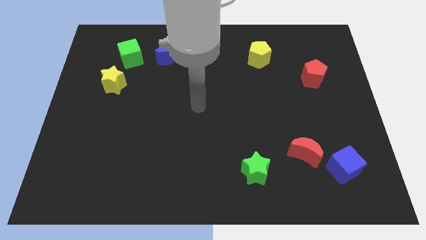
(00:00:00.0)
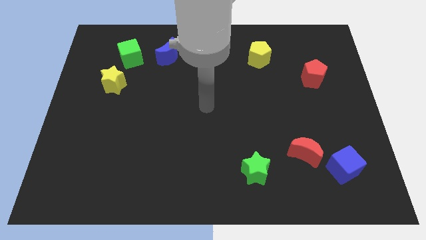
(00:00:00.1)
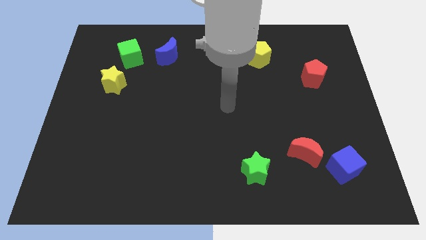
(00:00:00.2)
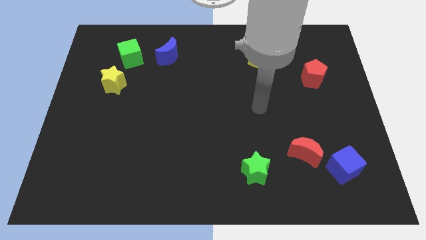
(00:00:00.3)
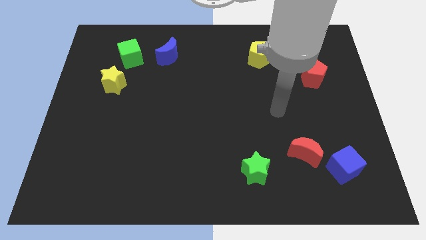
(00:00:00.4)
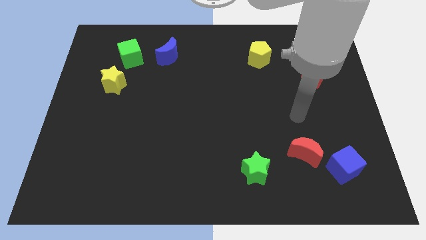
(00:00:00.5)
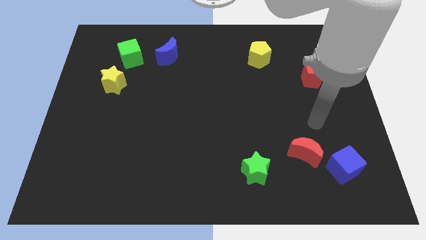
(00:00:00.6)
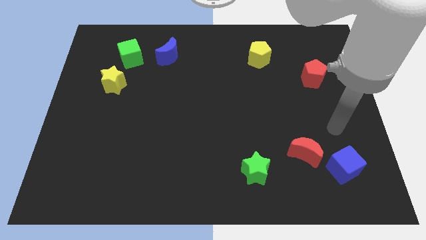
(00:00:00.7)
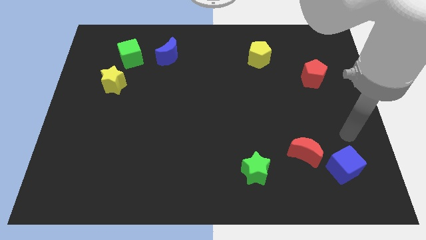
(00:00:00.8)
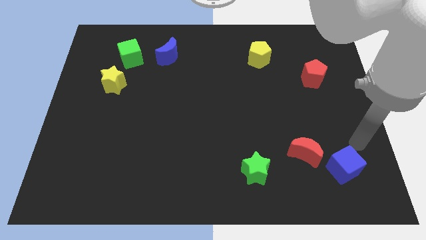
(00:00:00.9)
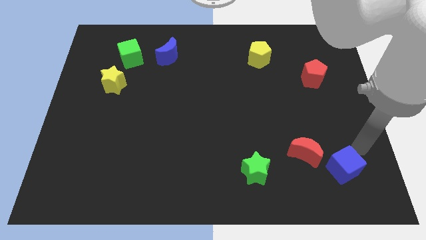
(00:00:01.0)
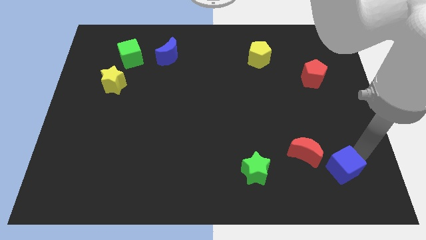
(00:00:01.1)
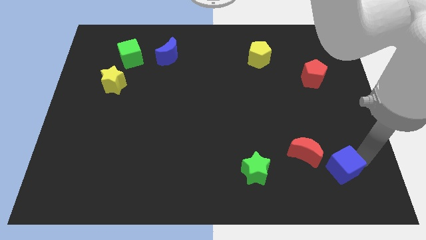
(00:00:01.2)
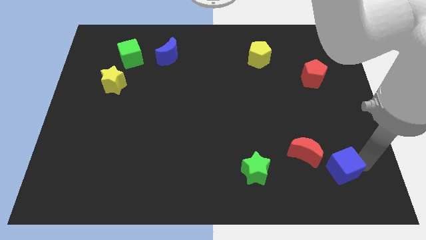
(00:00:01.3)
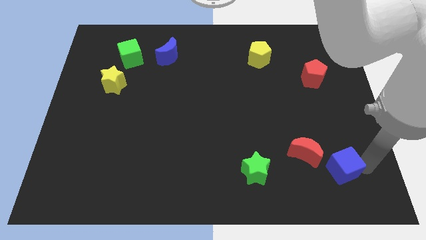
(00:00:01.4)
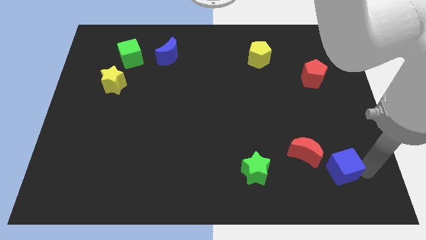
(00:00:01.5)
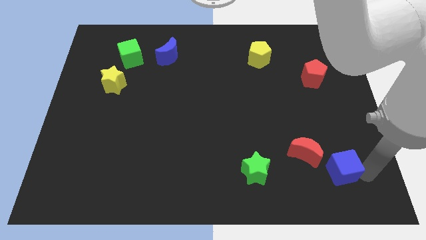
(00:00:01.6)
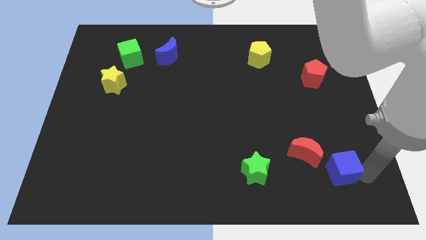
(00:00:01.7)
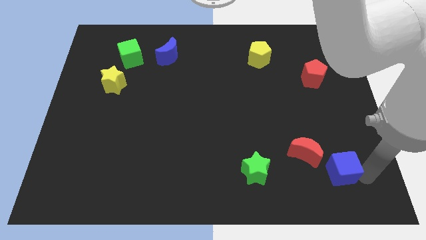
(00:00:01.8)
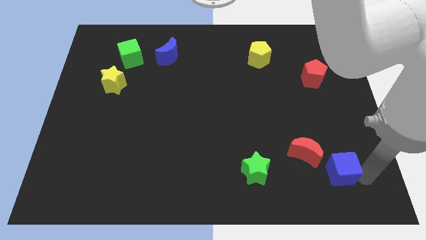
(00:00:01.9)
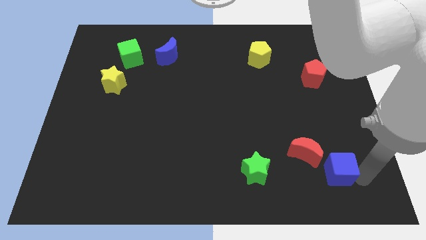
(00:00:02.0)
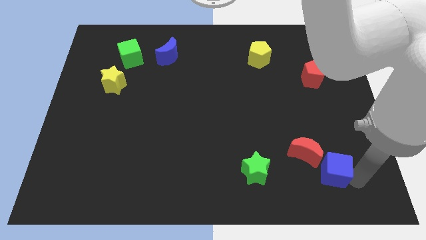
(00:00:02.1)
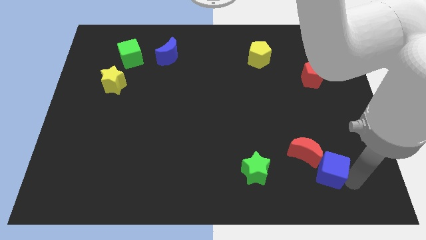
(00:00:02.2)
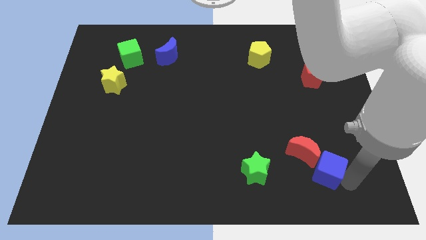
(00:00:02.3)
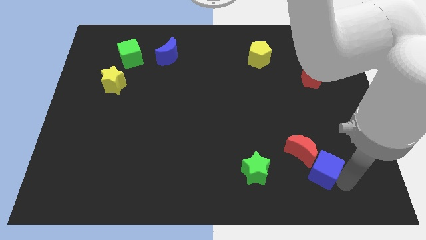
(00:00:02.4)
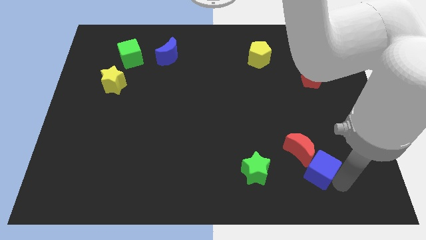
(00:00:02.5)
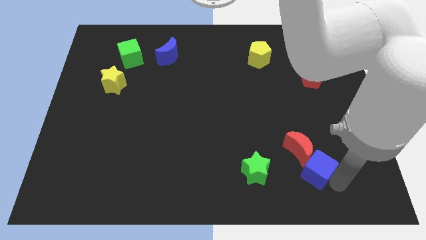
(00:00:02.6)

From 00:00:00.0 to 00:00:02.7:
move the blue cube close to the red moon

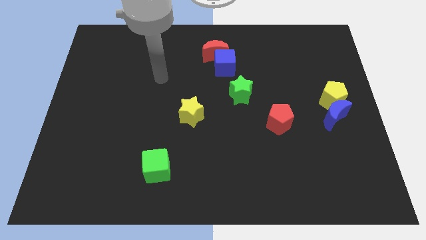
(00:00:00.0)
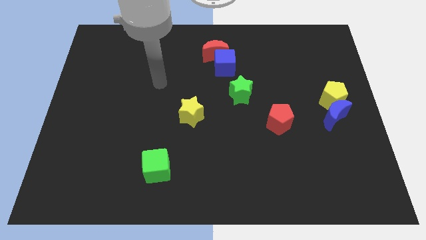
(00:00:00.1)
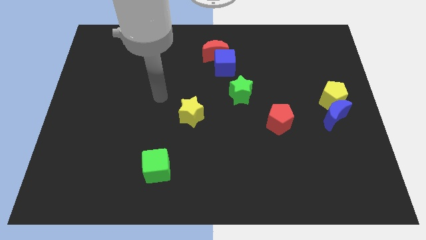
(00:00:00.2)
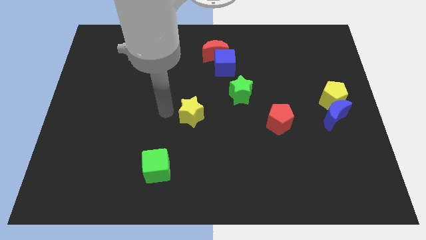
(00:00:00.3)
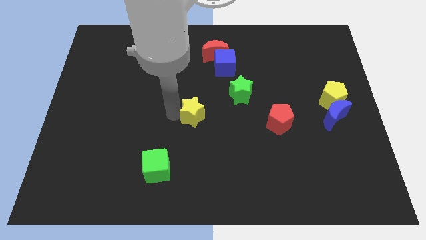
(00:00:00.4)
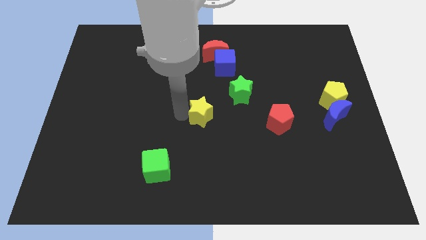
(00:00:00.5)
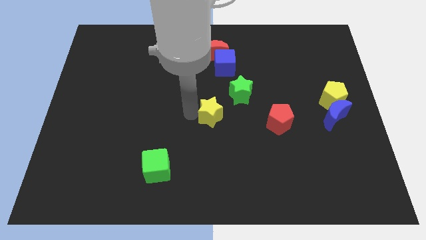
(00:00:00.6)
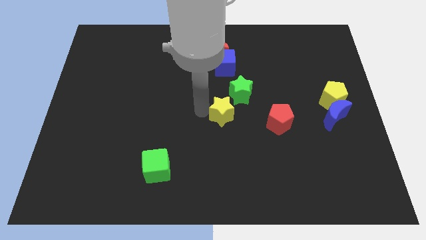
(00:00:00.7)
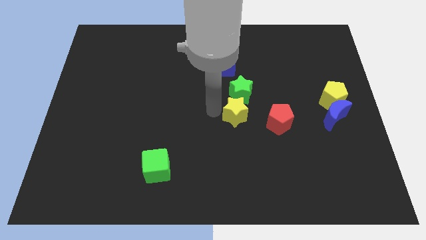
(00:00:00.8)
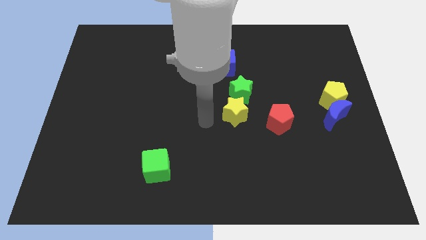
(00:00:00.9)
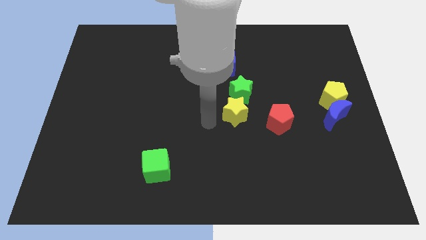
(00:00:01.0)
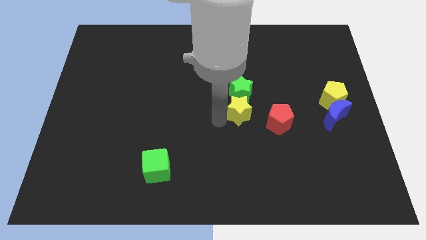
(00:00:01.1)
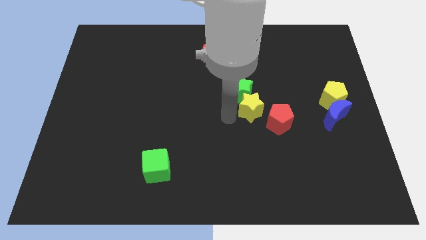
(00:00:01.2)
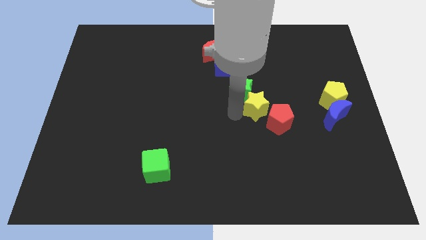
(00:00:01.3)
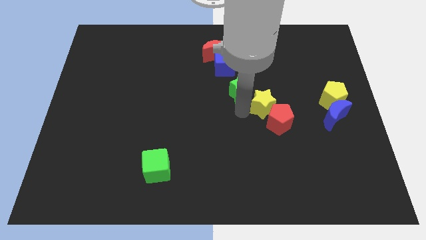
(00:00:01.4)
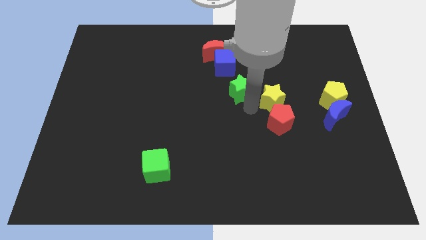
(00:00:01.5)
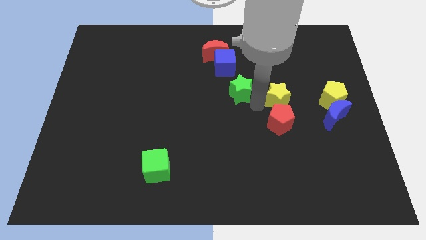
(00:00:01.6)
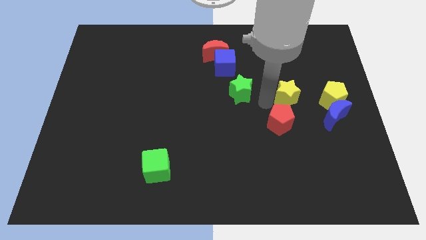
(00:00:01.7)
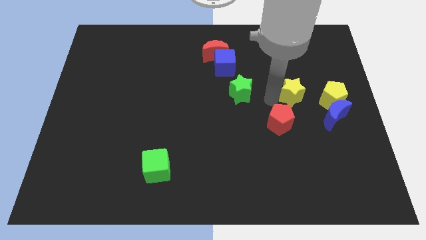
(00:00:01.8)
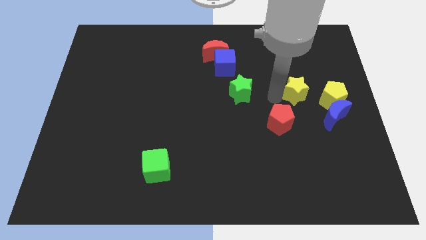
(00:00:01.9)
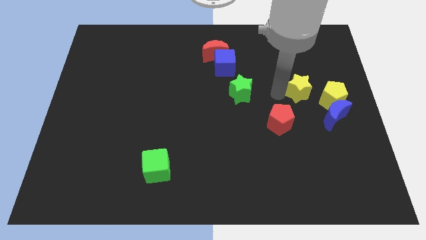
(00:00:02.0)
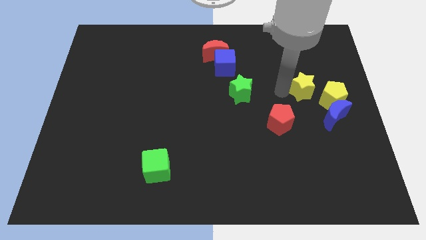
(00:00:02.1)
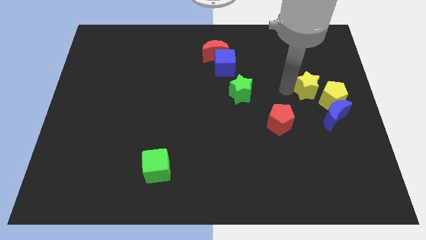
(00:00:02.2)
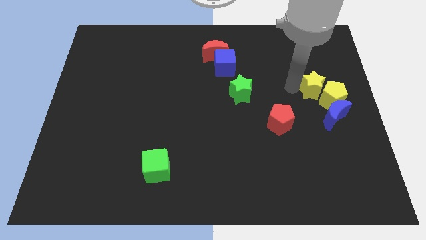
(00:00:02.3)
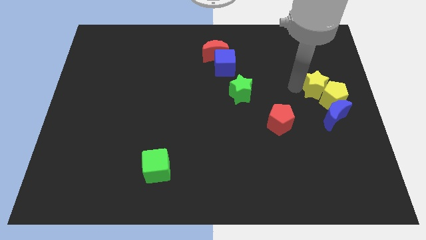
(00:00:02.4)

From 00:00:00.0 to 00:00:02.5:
slide the yellow star close to the yellow pentagon

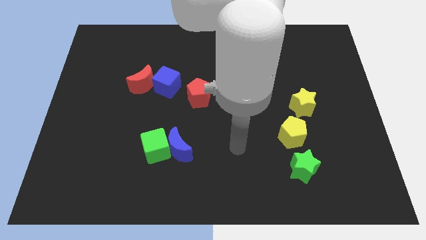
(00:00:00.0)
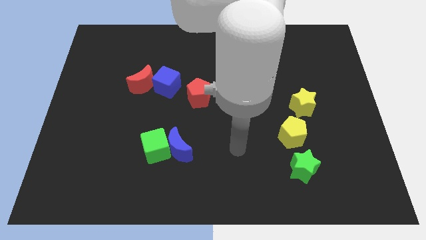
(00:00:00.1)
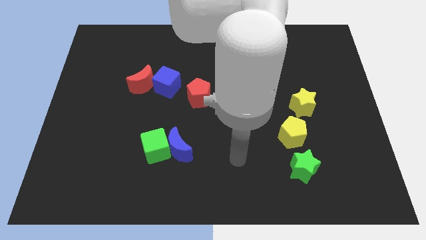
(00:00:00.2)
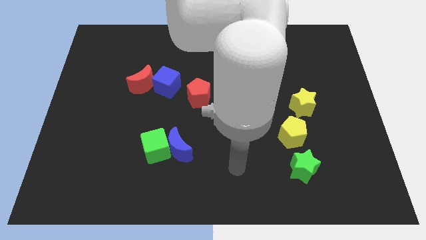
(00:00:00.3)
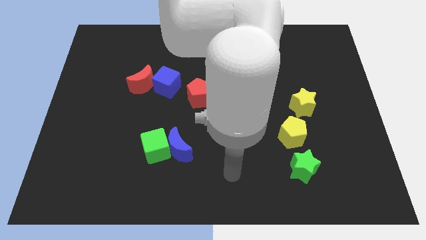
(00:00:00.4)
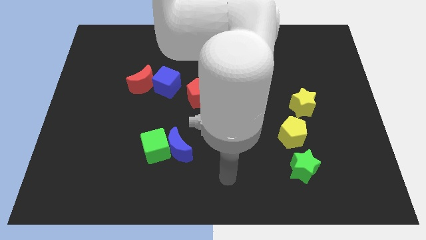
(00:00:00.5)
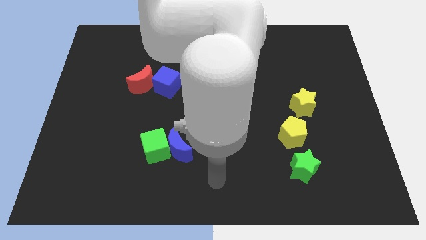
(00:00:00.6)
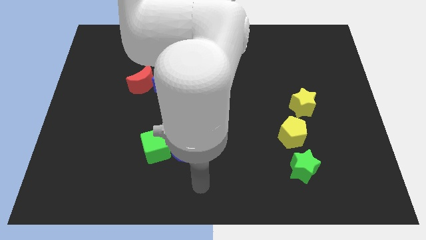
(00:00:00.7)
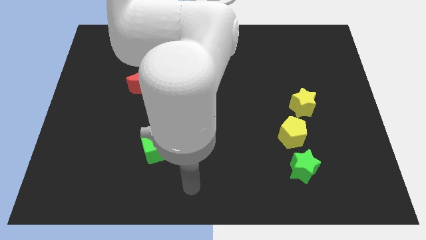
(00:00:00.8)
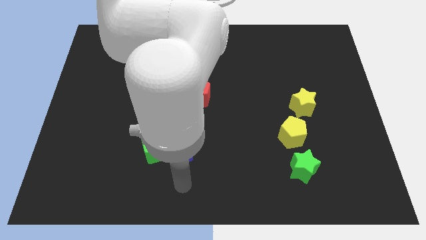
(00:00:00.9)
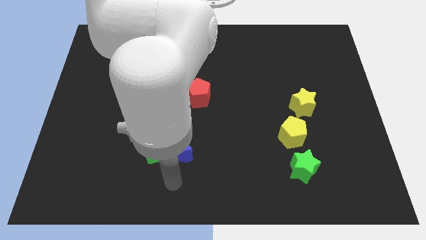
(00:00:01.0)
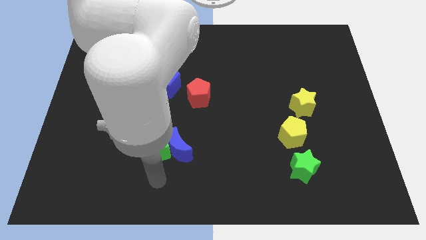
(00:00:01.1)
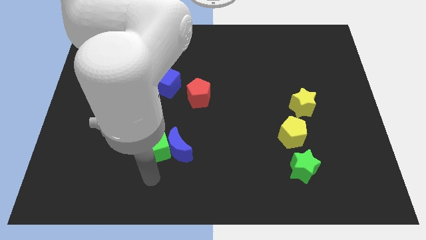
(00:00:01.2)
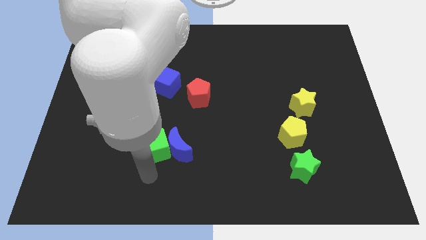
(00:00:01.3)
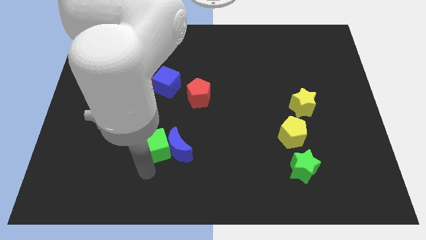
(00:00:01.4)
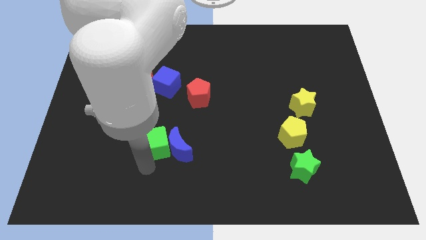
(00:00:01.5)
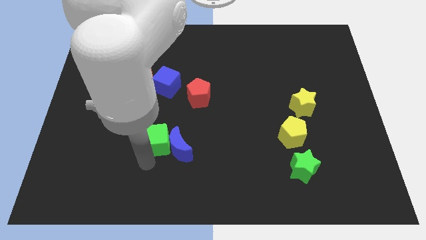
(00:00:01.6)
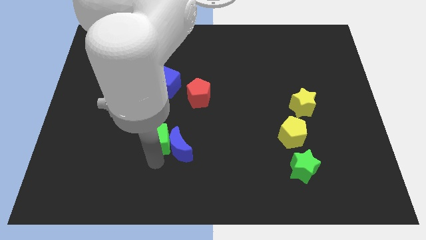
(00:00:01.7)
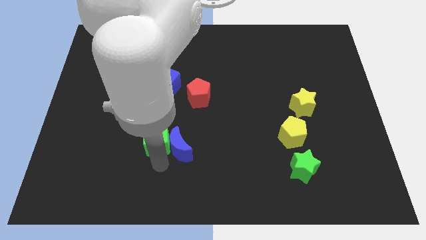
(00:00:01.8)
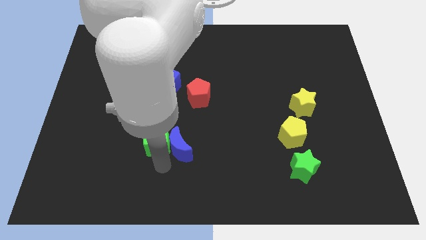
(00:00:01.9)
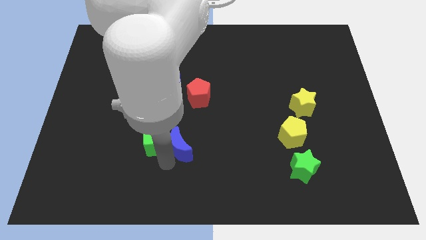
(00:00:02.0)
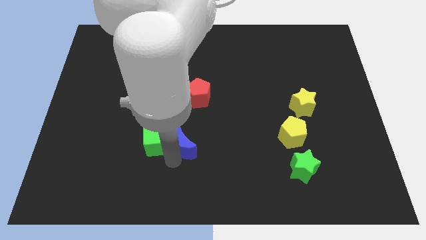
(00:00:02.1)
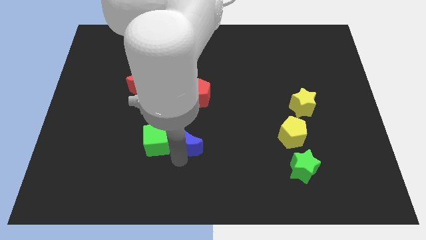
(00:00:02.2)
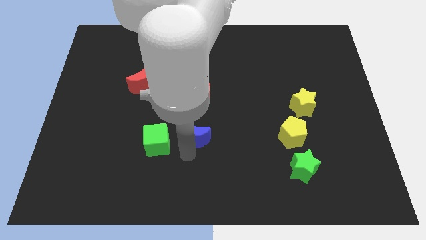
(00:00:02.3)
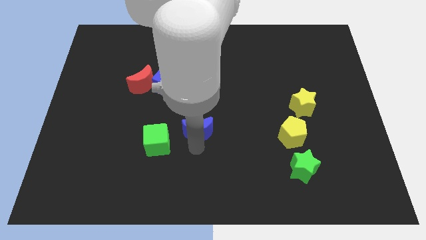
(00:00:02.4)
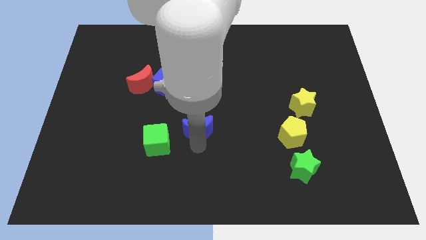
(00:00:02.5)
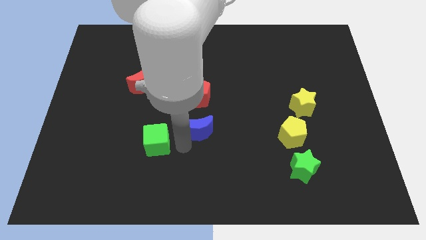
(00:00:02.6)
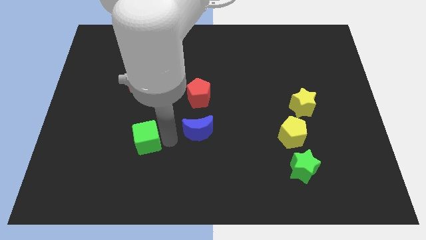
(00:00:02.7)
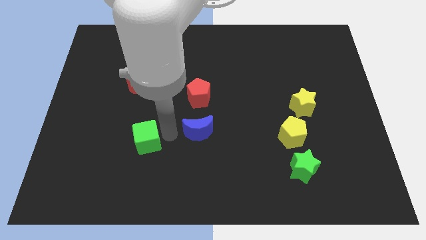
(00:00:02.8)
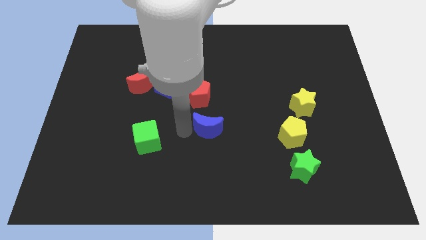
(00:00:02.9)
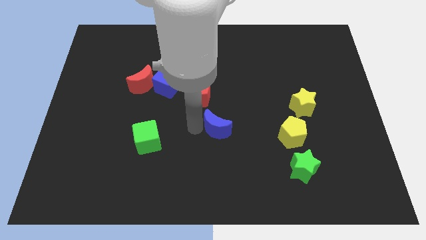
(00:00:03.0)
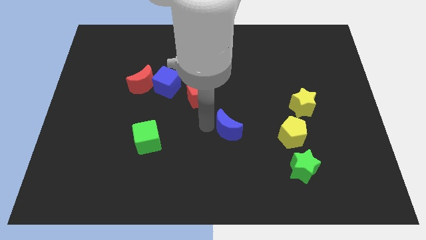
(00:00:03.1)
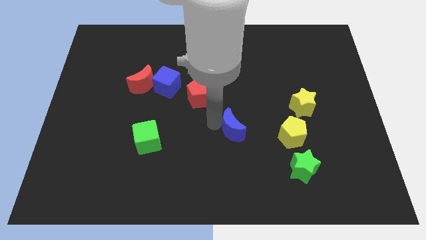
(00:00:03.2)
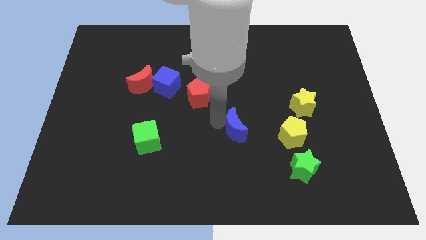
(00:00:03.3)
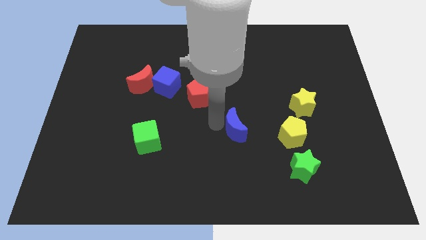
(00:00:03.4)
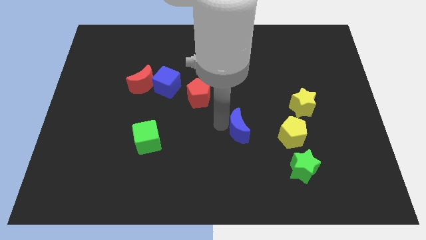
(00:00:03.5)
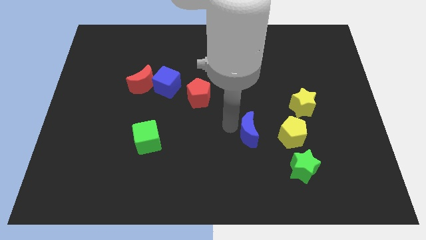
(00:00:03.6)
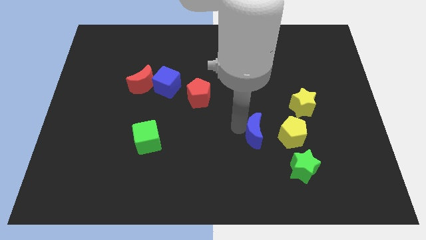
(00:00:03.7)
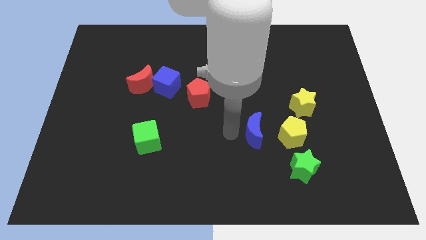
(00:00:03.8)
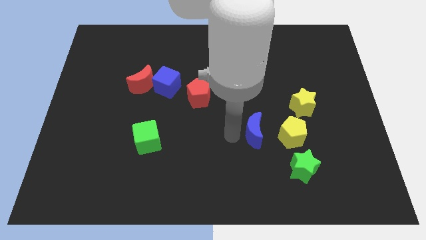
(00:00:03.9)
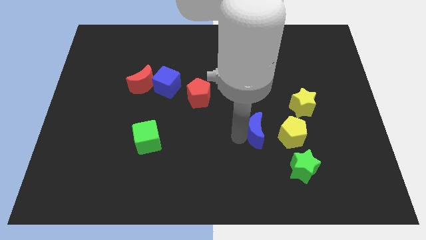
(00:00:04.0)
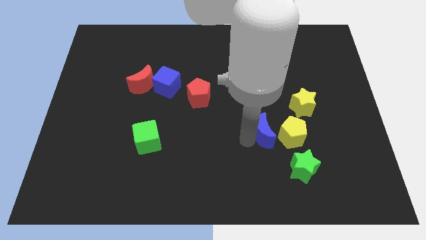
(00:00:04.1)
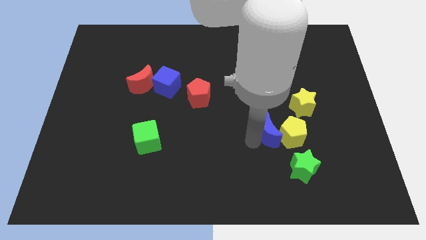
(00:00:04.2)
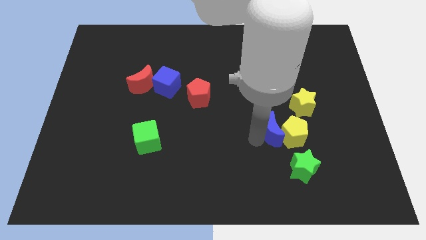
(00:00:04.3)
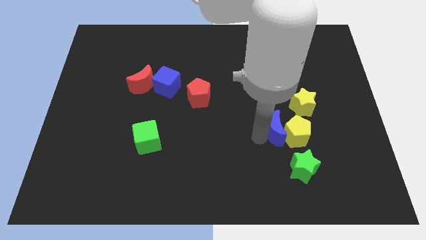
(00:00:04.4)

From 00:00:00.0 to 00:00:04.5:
move the blue moon towards the yellow pentagon
